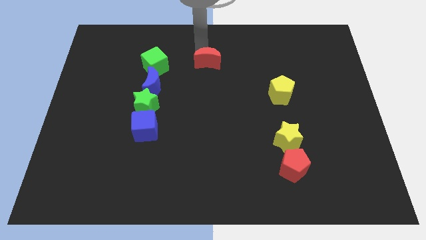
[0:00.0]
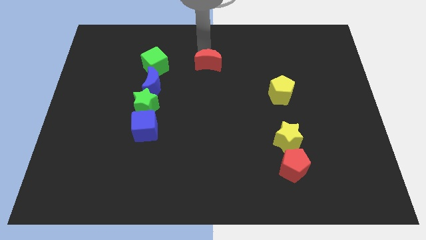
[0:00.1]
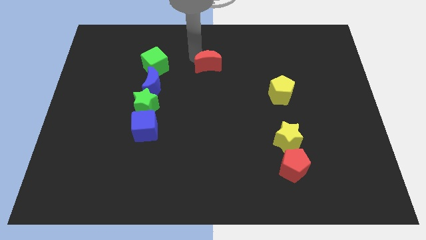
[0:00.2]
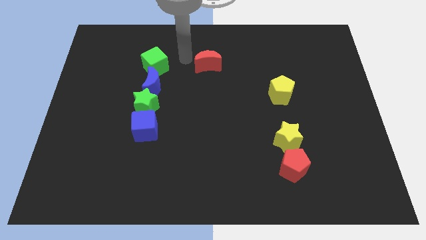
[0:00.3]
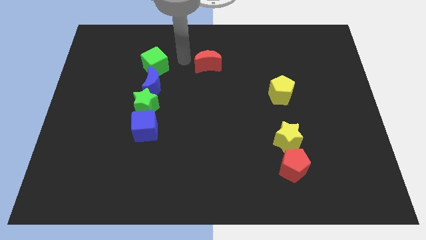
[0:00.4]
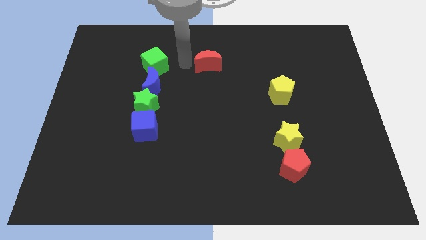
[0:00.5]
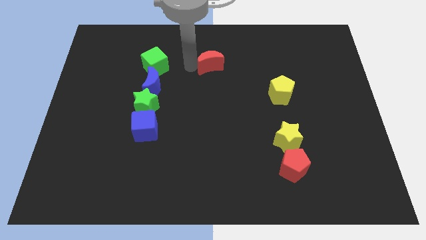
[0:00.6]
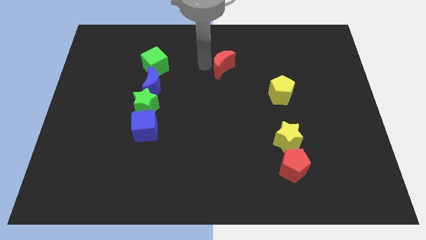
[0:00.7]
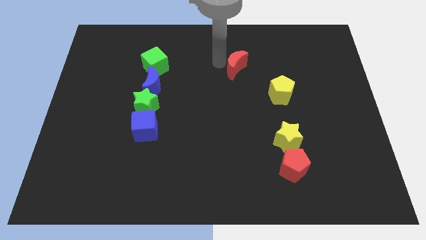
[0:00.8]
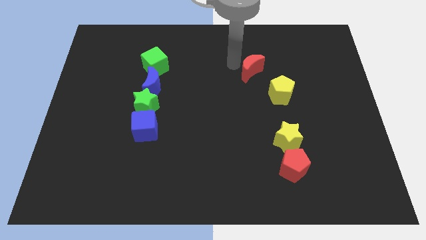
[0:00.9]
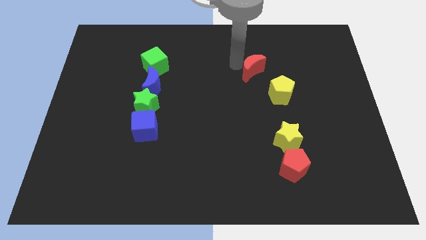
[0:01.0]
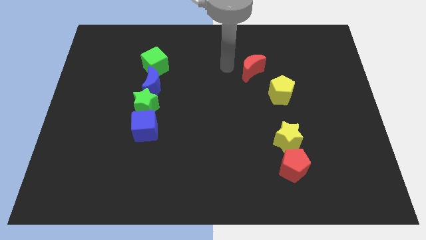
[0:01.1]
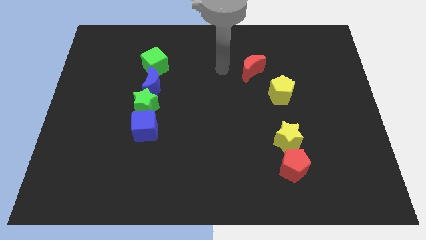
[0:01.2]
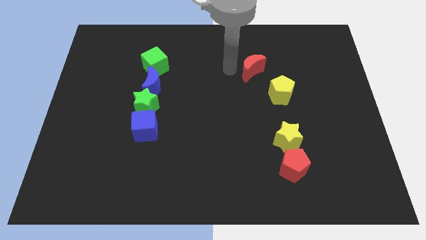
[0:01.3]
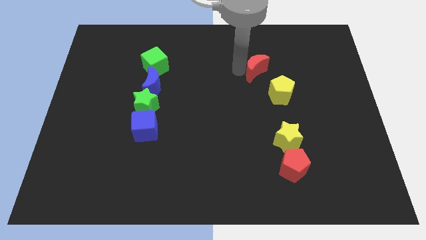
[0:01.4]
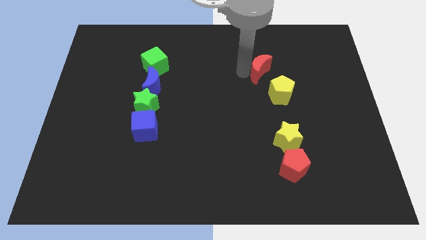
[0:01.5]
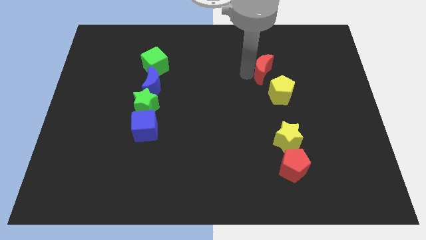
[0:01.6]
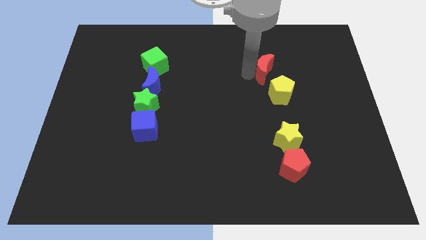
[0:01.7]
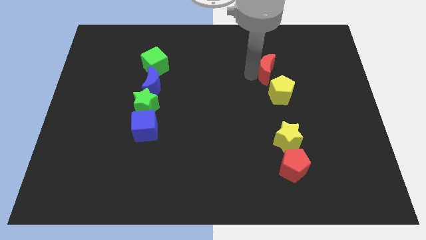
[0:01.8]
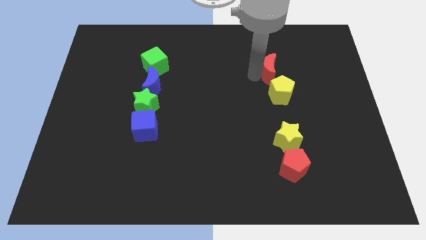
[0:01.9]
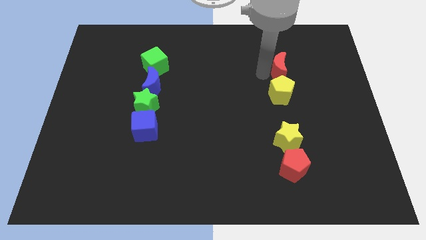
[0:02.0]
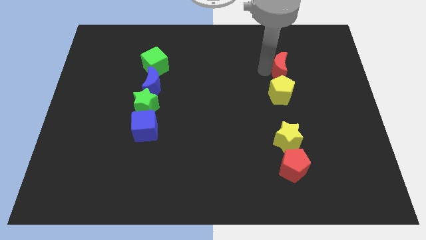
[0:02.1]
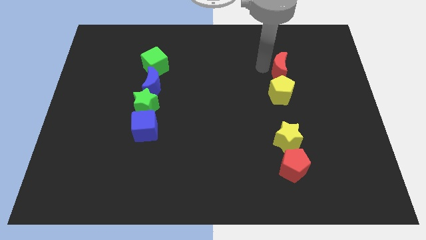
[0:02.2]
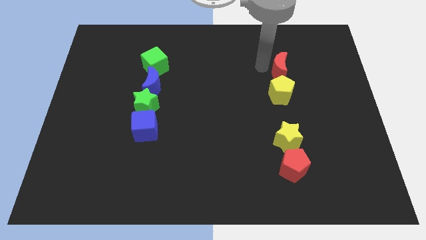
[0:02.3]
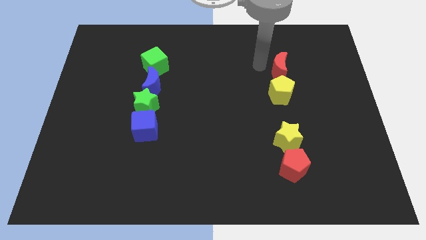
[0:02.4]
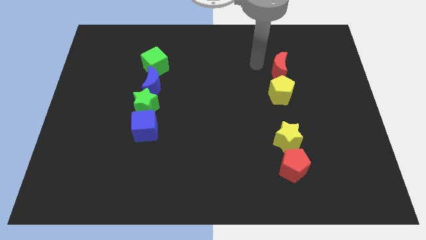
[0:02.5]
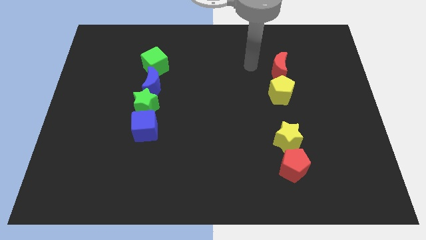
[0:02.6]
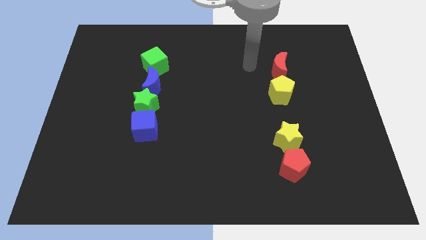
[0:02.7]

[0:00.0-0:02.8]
move red moon above yellow pentagon

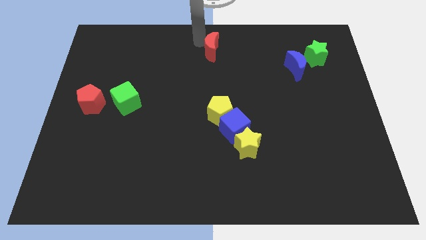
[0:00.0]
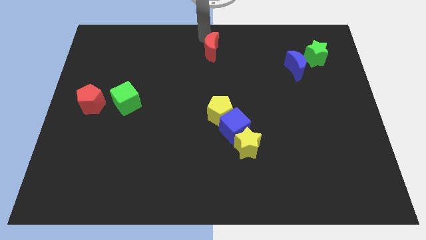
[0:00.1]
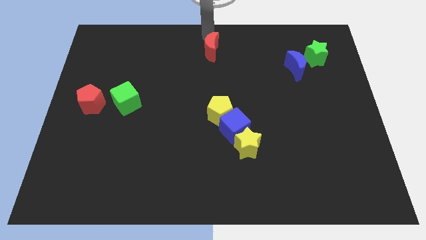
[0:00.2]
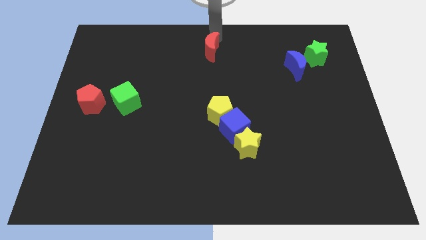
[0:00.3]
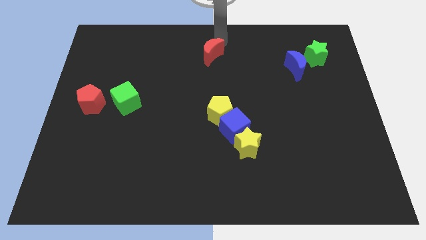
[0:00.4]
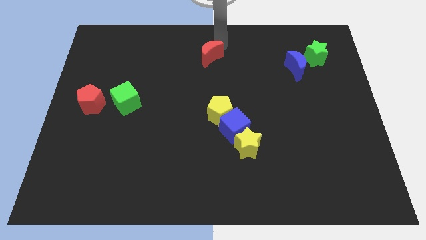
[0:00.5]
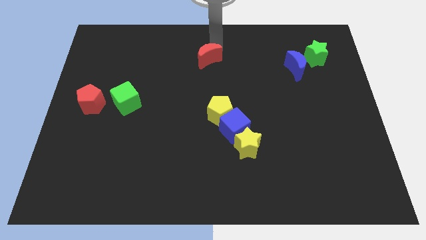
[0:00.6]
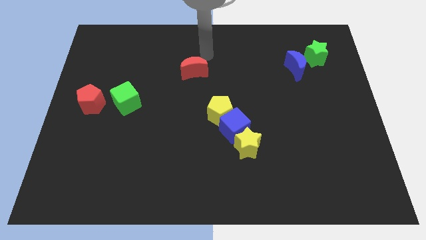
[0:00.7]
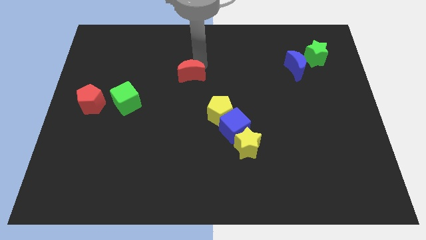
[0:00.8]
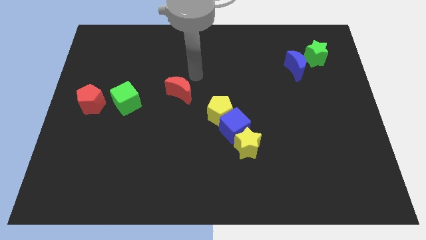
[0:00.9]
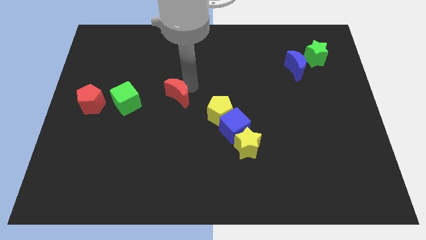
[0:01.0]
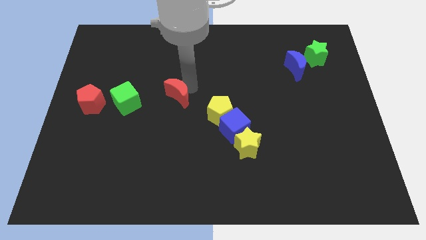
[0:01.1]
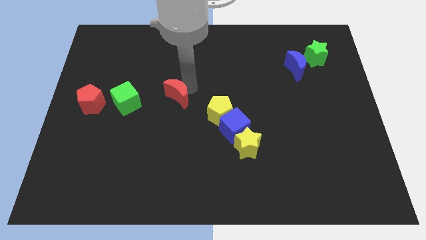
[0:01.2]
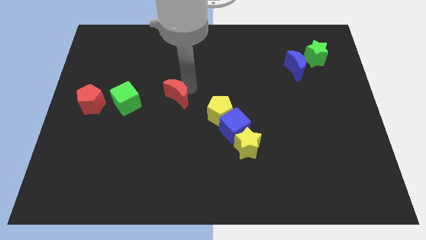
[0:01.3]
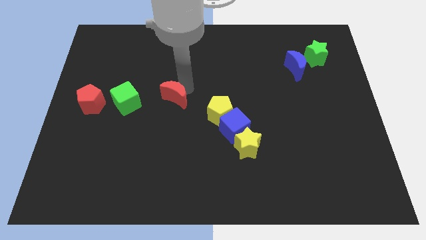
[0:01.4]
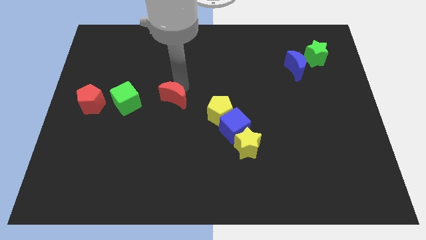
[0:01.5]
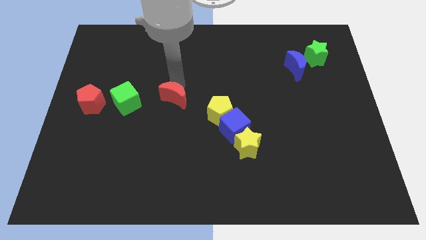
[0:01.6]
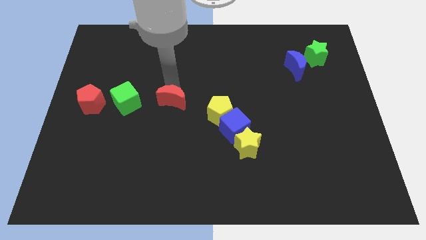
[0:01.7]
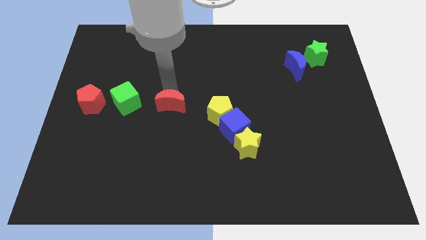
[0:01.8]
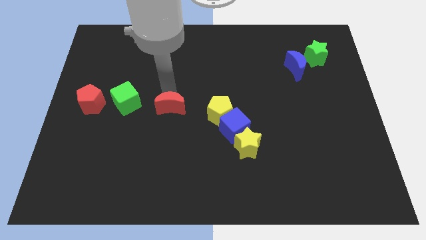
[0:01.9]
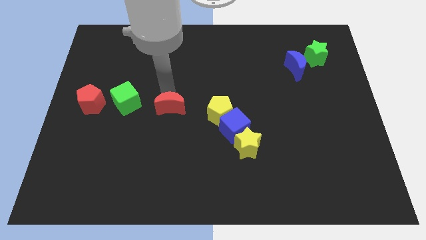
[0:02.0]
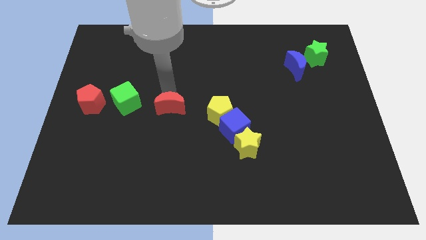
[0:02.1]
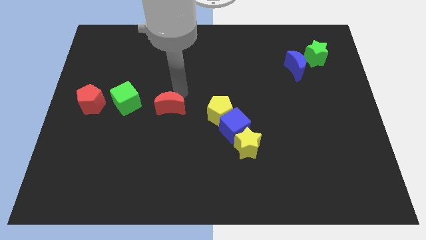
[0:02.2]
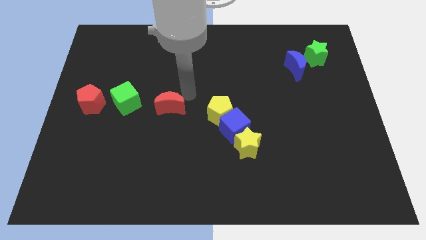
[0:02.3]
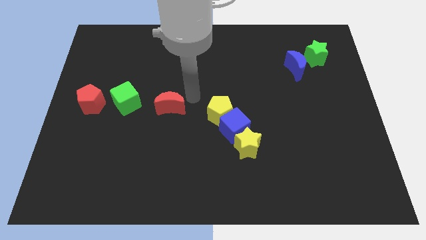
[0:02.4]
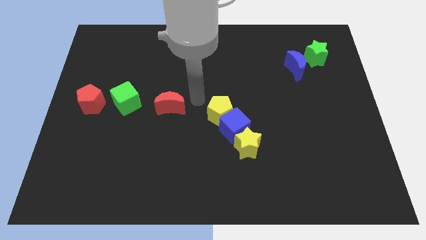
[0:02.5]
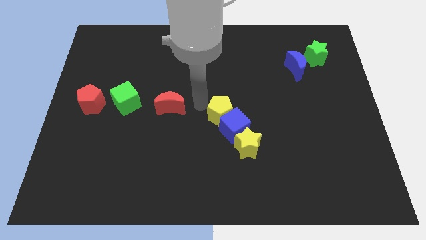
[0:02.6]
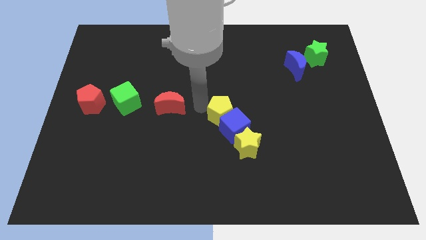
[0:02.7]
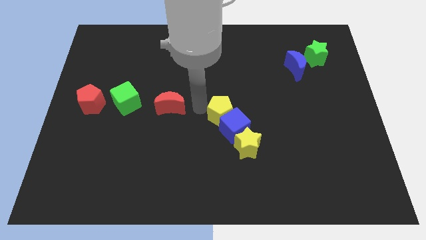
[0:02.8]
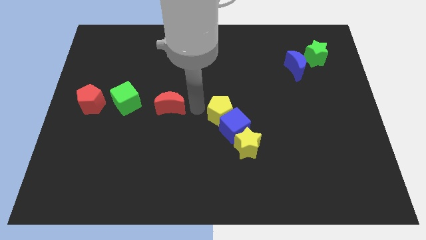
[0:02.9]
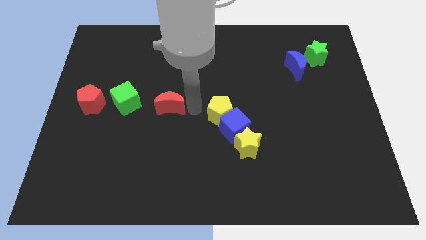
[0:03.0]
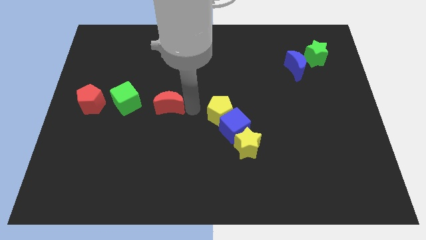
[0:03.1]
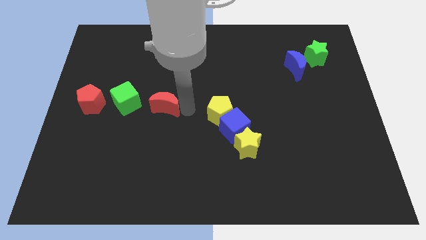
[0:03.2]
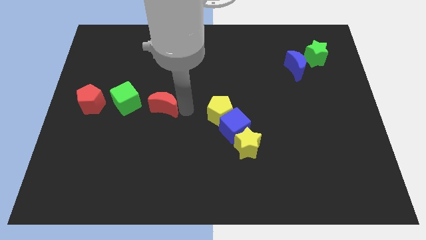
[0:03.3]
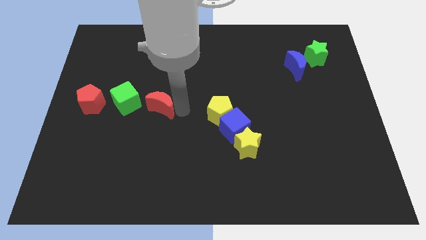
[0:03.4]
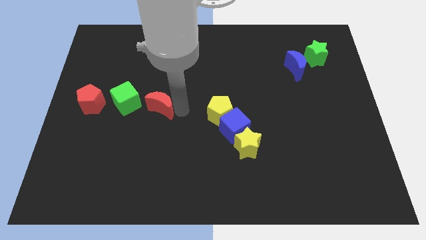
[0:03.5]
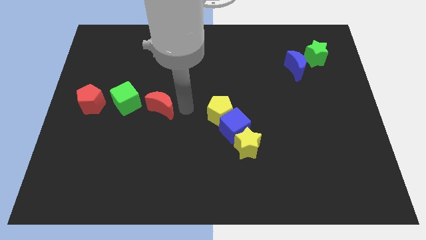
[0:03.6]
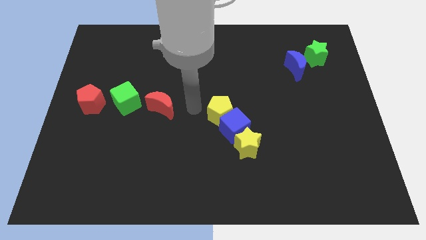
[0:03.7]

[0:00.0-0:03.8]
push the red crescent slightly towards the green cube

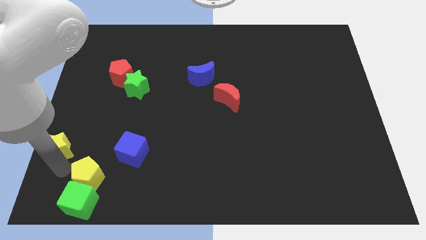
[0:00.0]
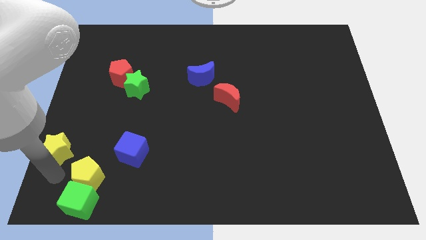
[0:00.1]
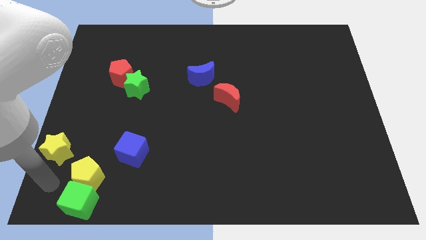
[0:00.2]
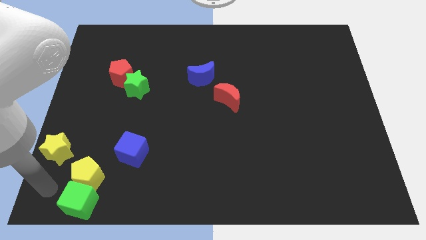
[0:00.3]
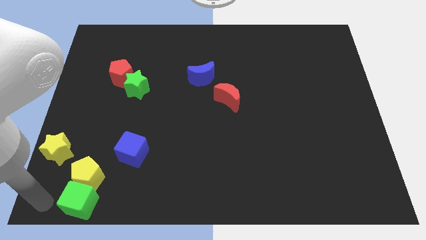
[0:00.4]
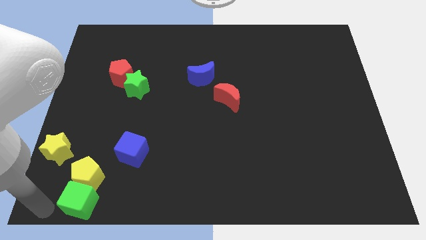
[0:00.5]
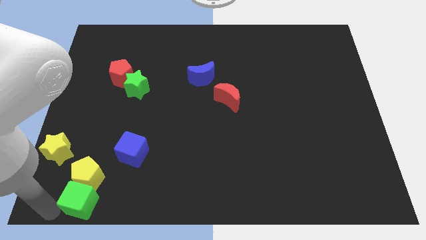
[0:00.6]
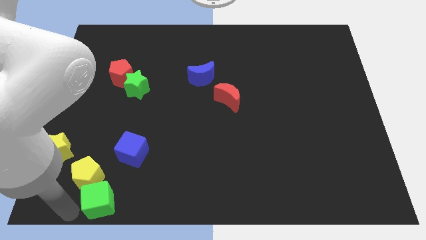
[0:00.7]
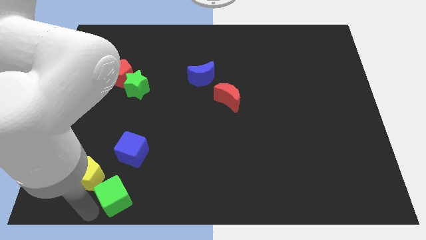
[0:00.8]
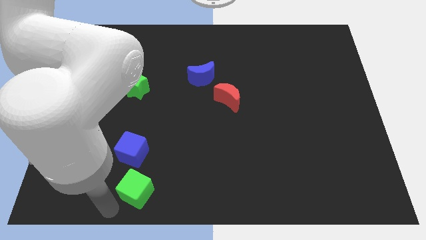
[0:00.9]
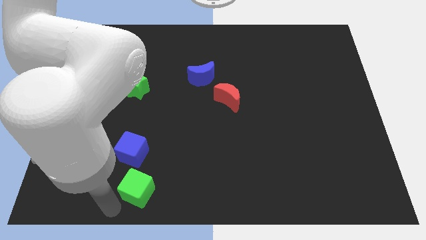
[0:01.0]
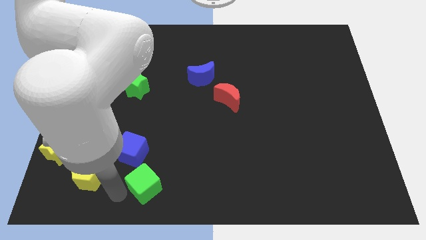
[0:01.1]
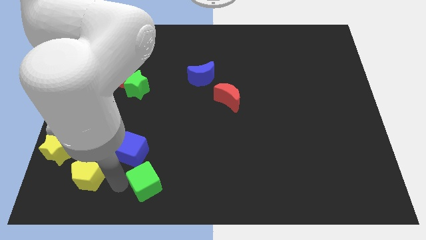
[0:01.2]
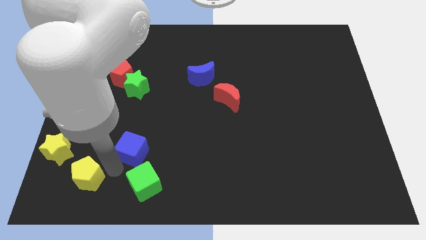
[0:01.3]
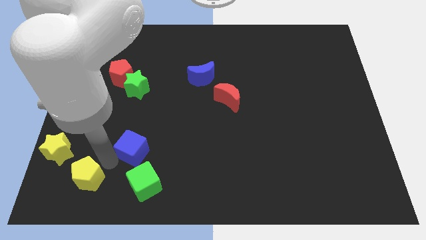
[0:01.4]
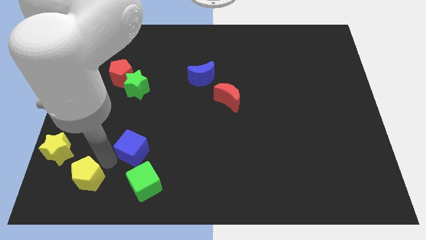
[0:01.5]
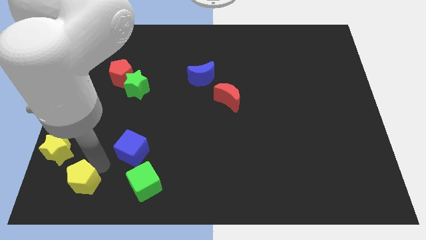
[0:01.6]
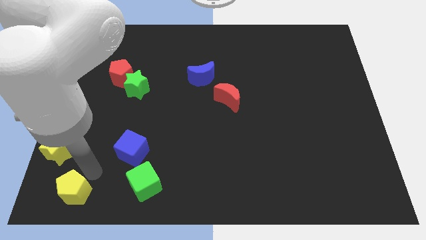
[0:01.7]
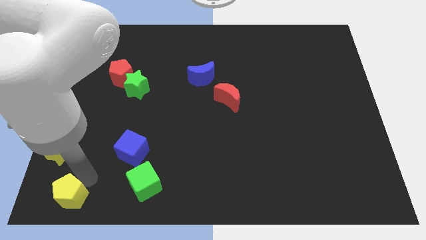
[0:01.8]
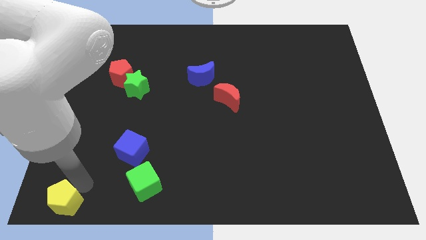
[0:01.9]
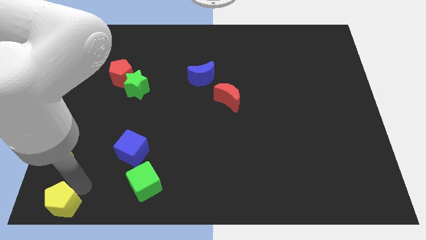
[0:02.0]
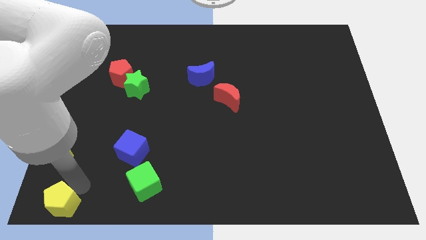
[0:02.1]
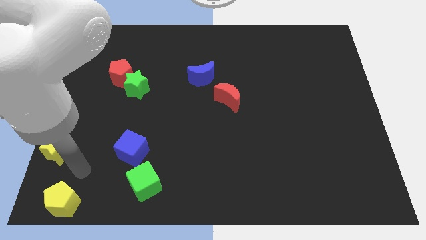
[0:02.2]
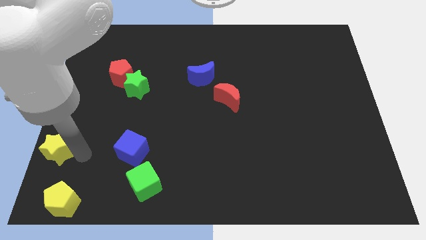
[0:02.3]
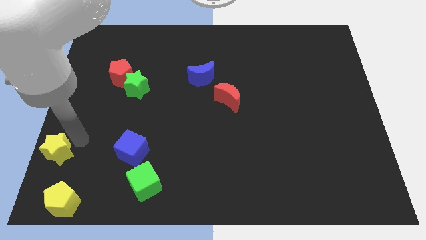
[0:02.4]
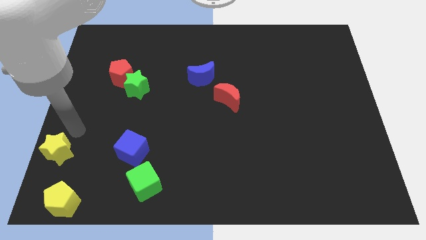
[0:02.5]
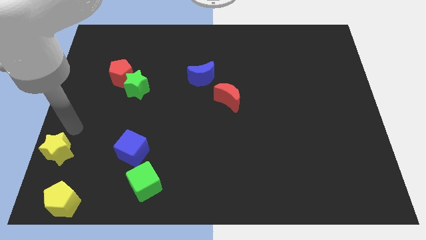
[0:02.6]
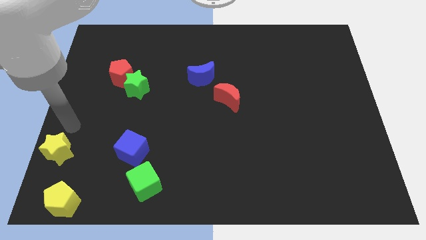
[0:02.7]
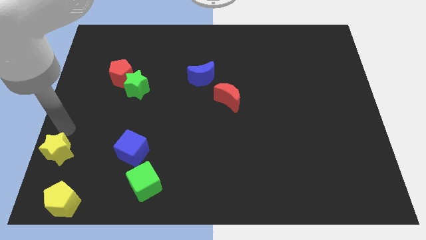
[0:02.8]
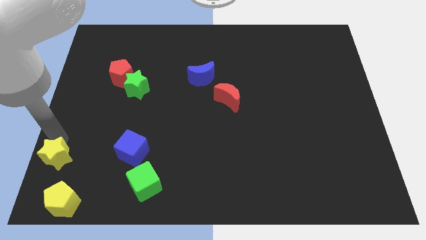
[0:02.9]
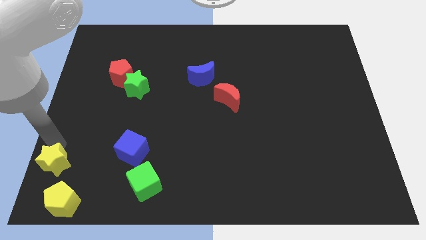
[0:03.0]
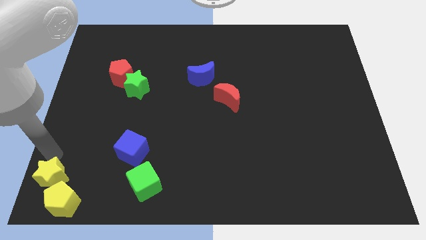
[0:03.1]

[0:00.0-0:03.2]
place the yellow pentagon to the bottom left
